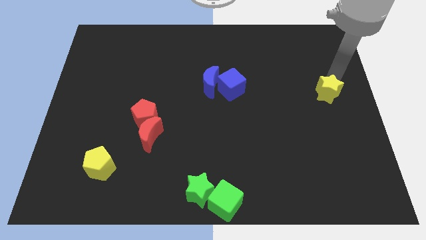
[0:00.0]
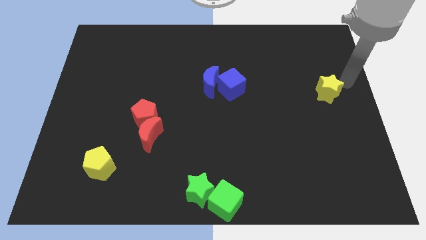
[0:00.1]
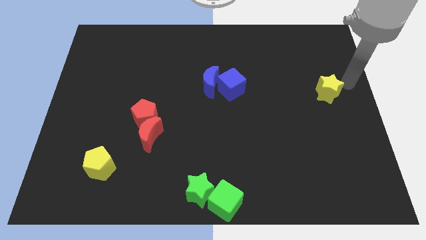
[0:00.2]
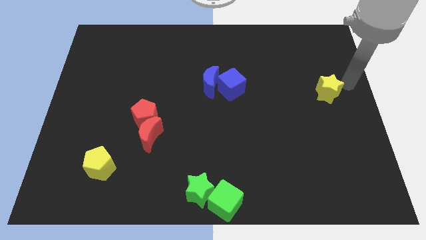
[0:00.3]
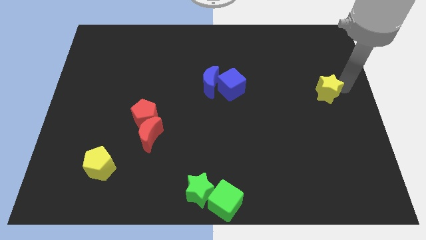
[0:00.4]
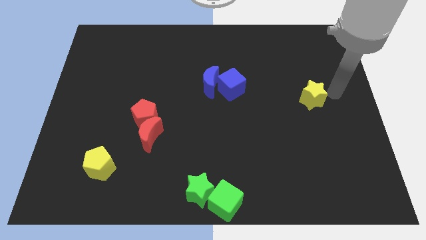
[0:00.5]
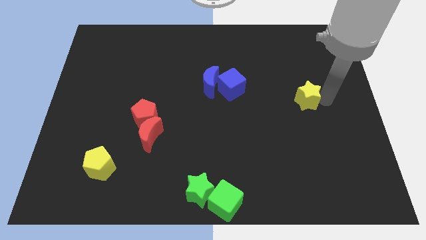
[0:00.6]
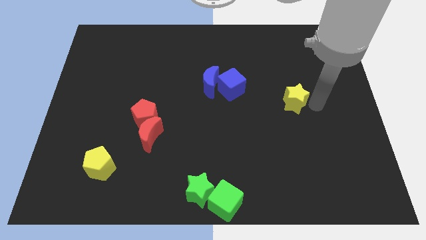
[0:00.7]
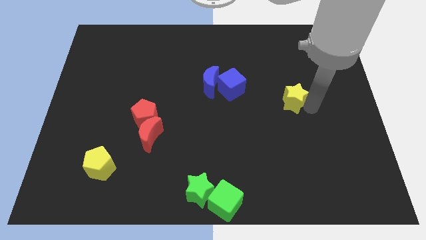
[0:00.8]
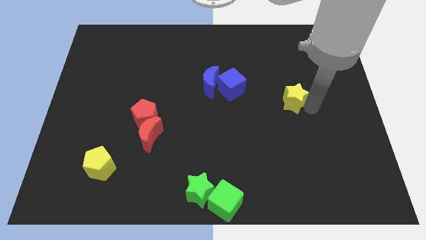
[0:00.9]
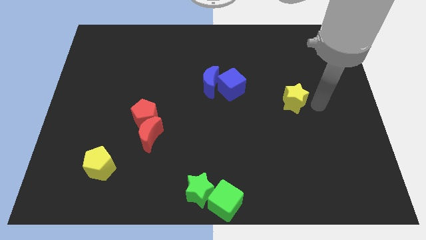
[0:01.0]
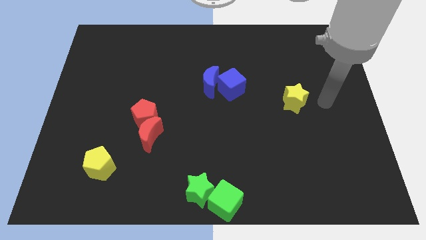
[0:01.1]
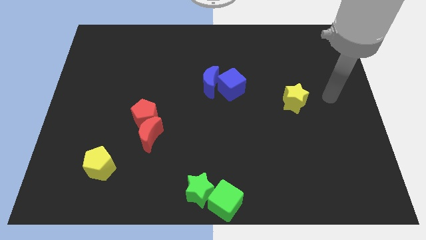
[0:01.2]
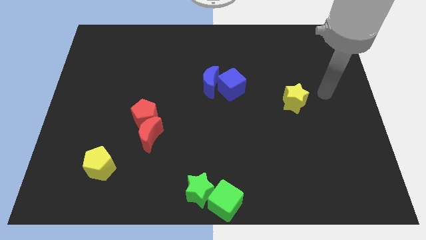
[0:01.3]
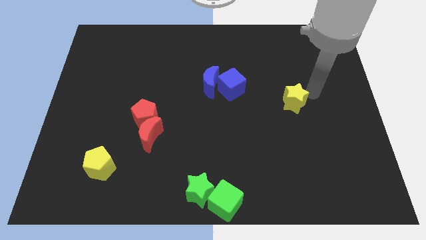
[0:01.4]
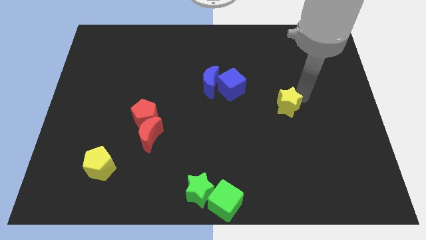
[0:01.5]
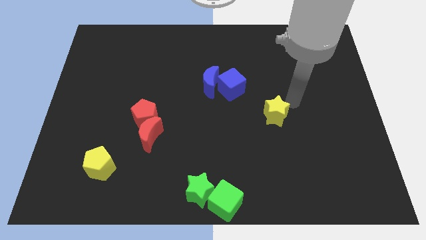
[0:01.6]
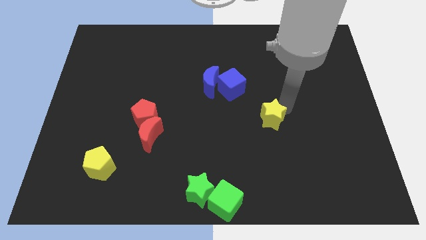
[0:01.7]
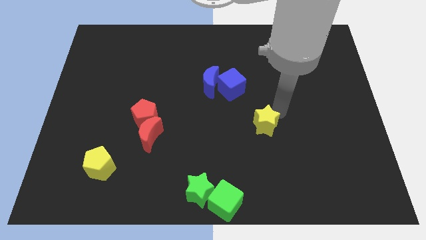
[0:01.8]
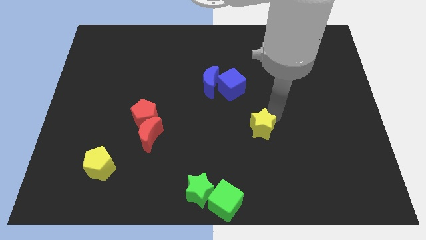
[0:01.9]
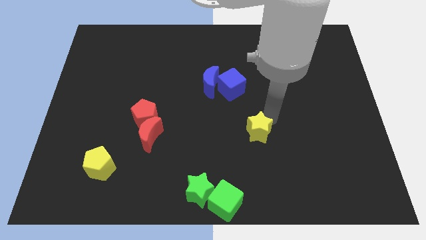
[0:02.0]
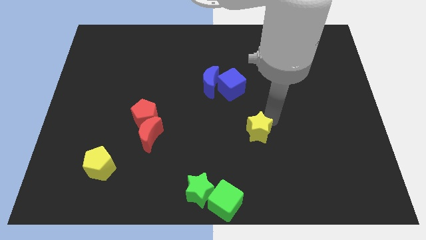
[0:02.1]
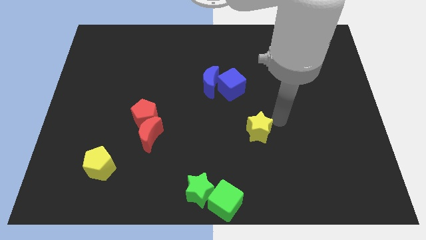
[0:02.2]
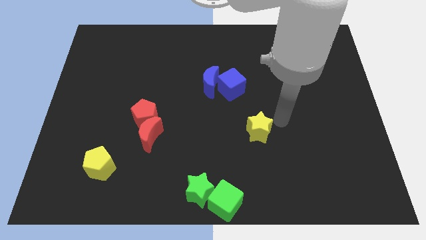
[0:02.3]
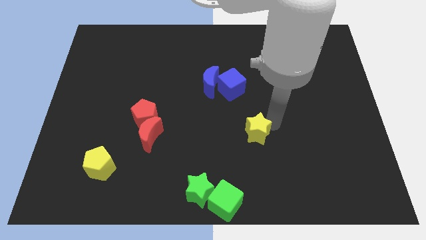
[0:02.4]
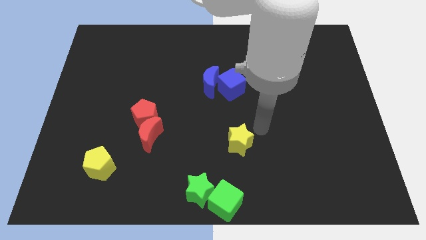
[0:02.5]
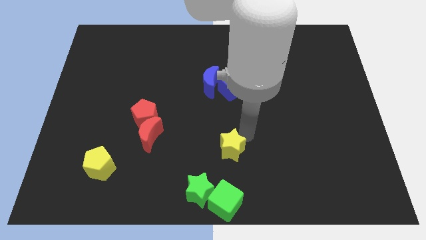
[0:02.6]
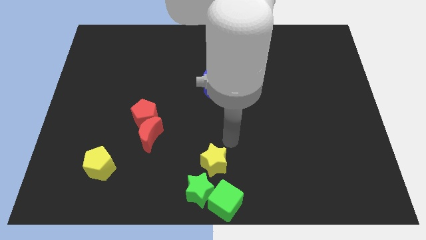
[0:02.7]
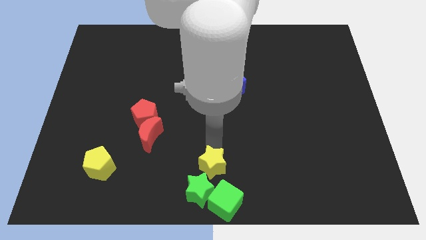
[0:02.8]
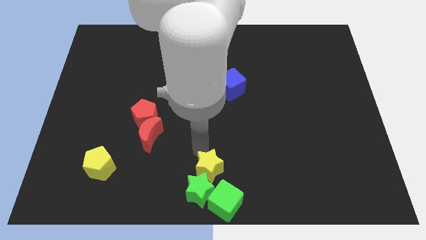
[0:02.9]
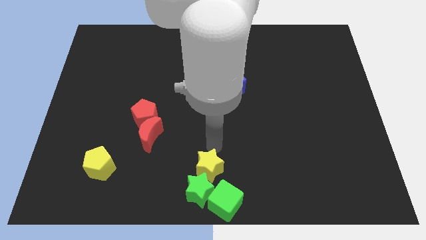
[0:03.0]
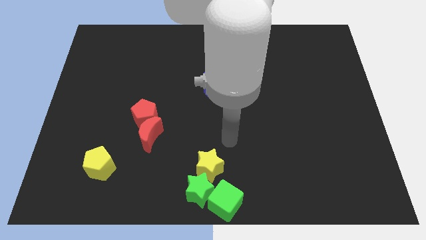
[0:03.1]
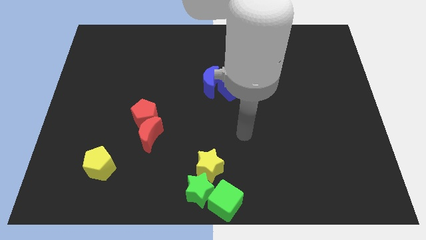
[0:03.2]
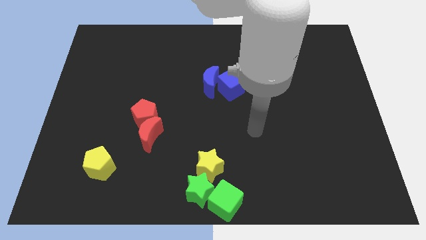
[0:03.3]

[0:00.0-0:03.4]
push the yellow star close to the green star

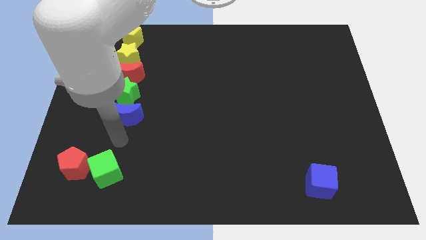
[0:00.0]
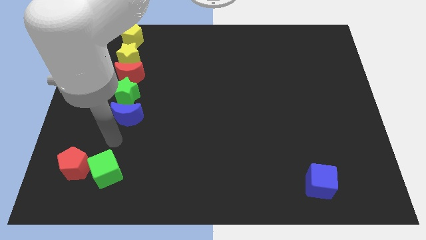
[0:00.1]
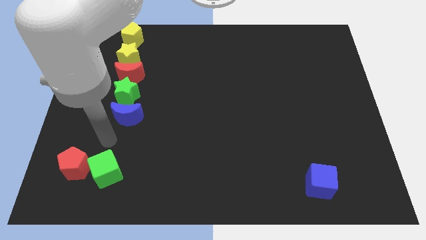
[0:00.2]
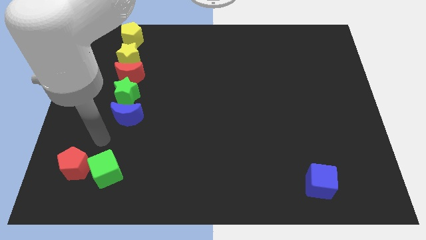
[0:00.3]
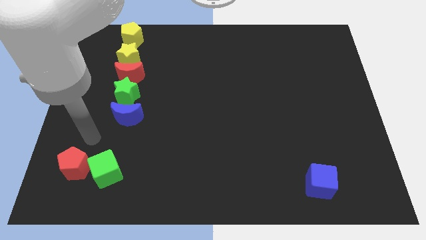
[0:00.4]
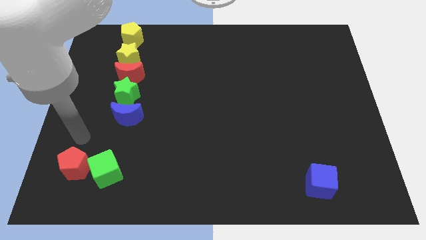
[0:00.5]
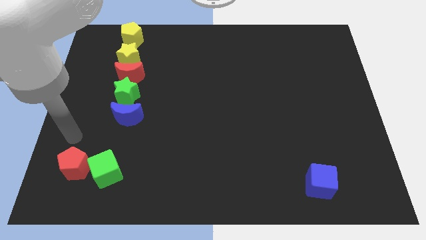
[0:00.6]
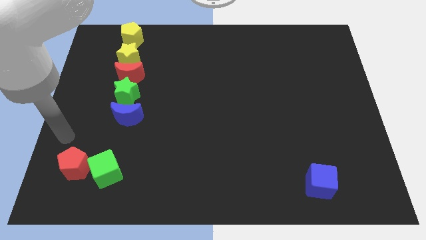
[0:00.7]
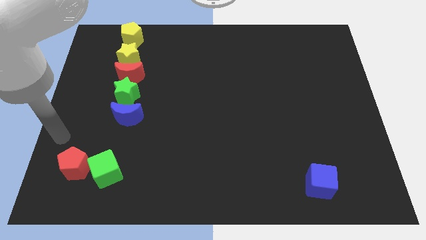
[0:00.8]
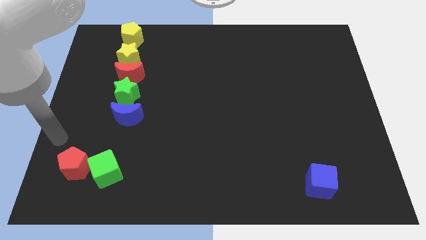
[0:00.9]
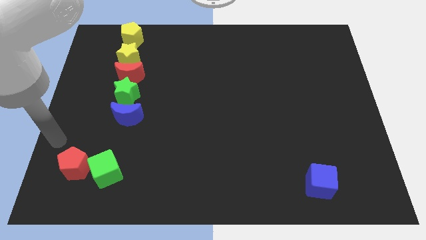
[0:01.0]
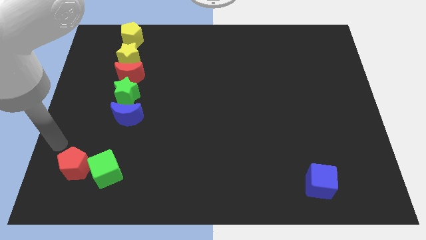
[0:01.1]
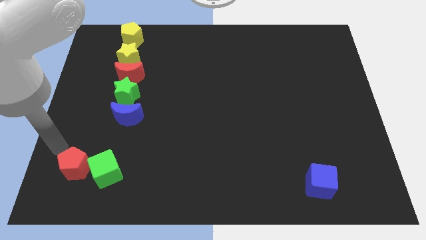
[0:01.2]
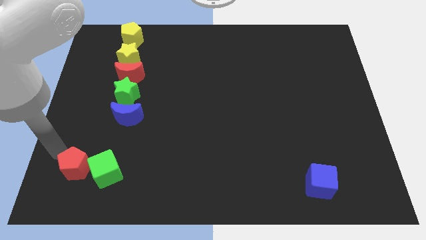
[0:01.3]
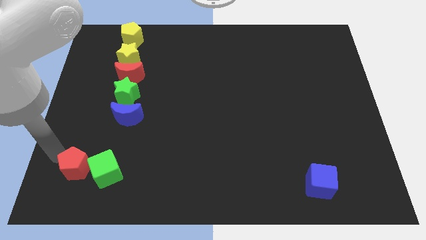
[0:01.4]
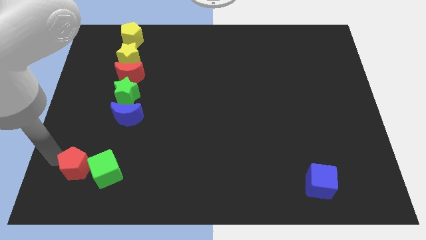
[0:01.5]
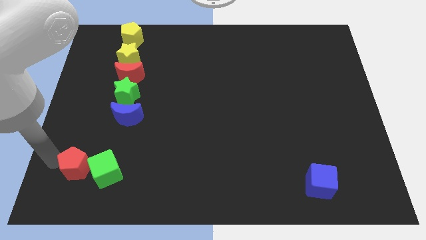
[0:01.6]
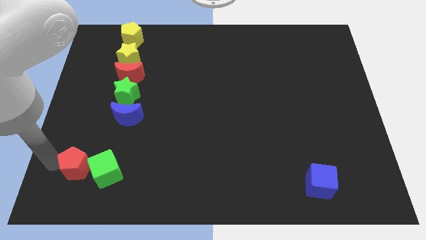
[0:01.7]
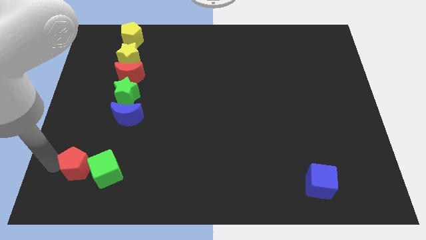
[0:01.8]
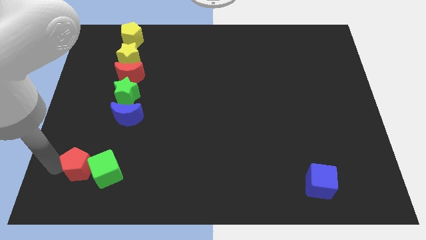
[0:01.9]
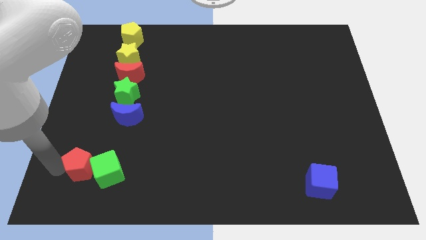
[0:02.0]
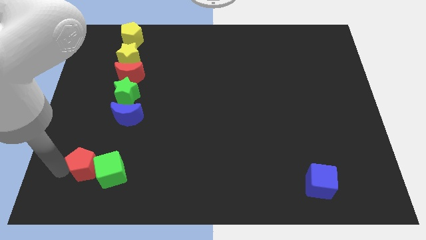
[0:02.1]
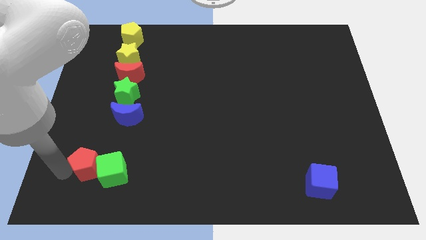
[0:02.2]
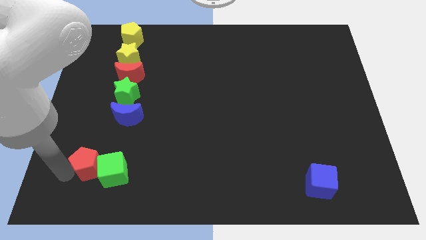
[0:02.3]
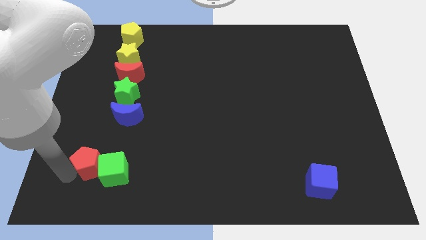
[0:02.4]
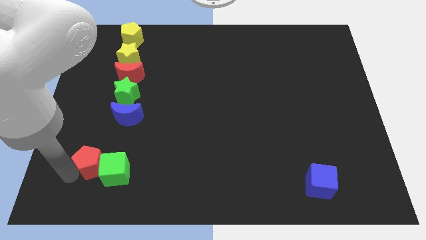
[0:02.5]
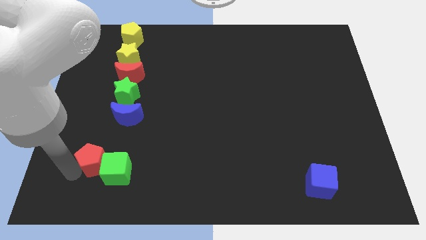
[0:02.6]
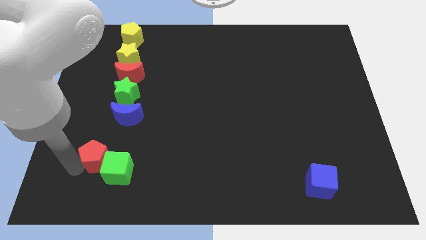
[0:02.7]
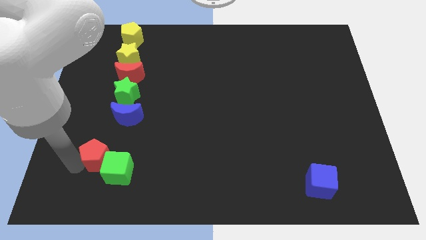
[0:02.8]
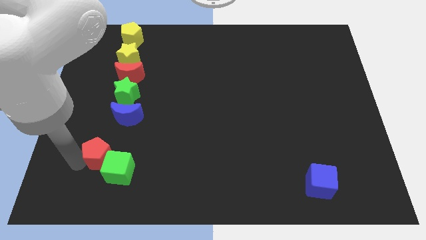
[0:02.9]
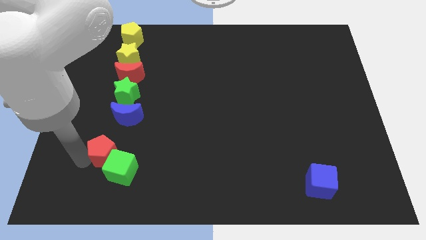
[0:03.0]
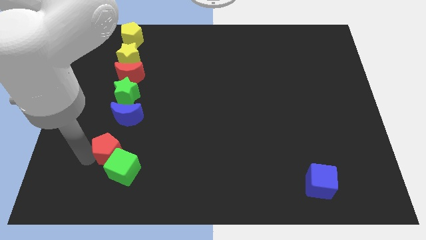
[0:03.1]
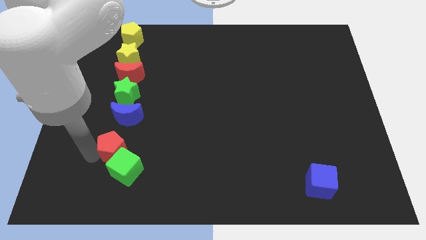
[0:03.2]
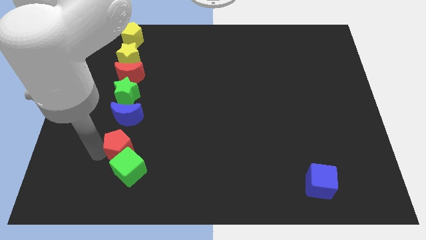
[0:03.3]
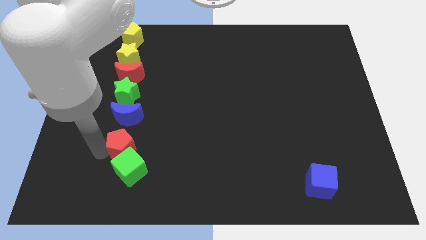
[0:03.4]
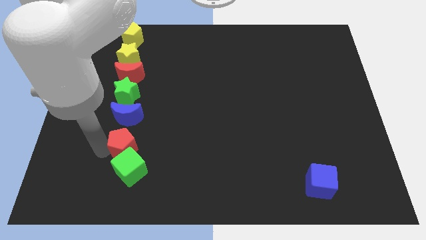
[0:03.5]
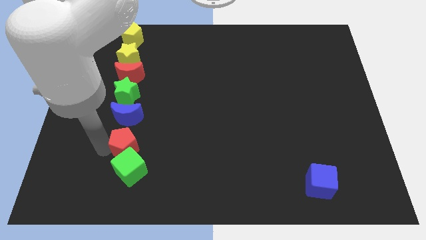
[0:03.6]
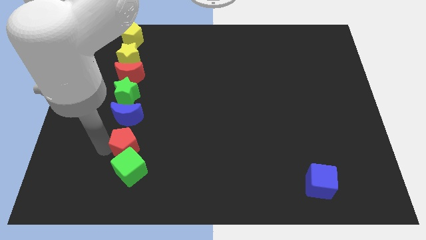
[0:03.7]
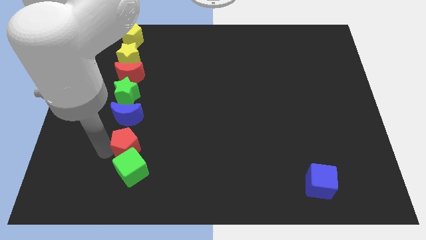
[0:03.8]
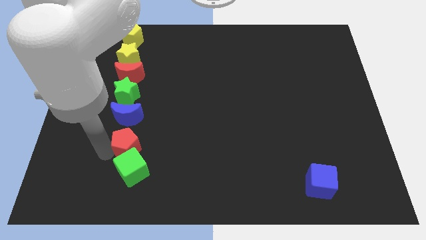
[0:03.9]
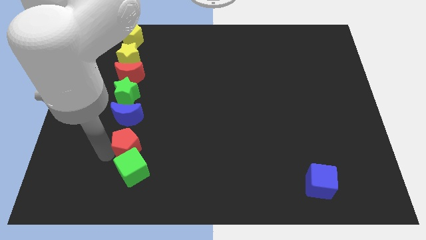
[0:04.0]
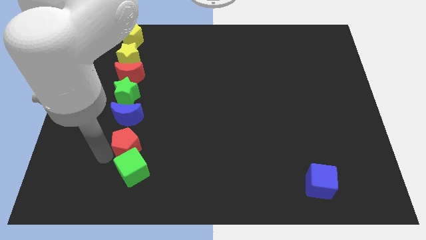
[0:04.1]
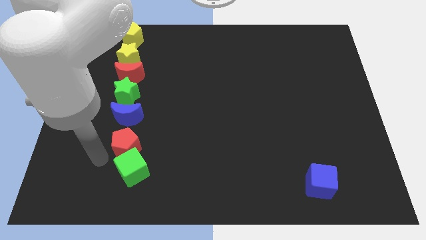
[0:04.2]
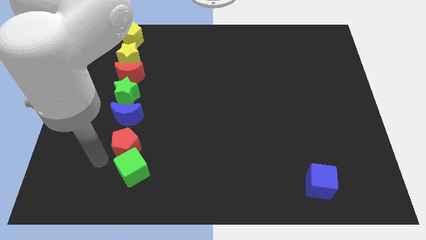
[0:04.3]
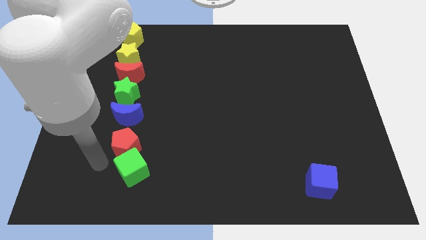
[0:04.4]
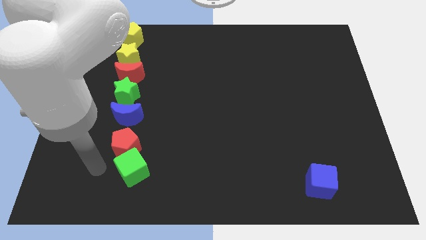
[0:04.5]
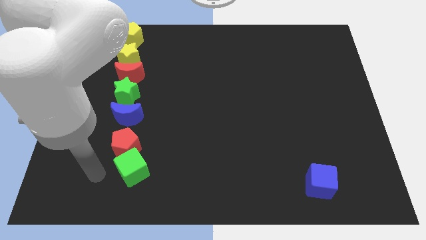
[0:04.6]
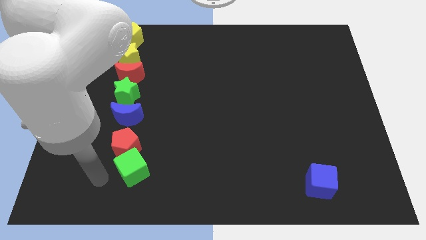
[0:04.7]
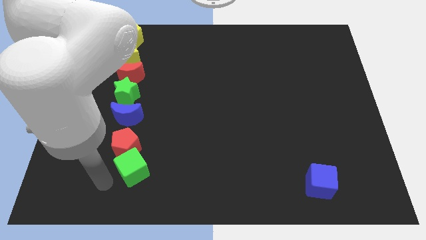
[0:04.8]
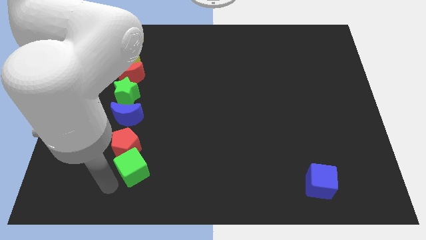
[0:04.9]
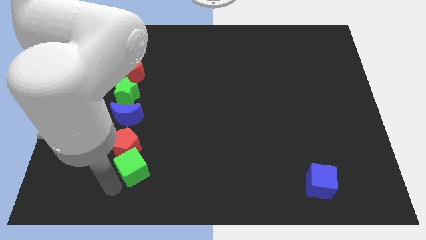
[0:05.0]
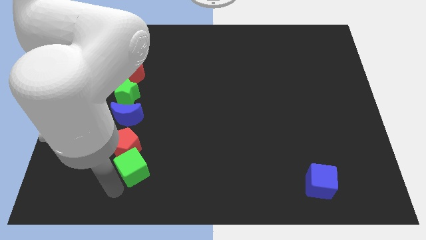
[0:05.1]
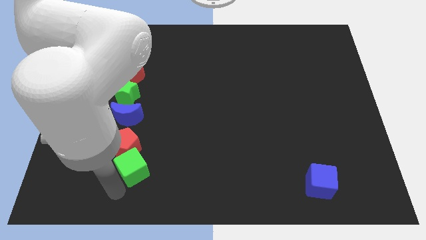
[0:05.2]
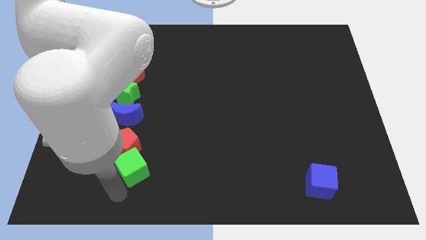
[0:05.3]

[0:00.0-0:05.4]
move red pentagon below the blue moon
